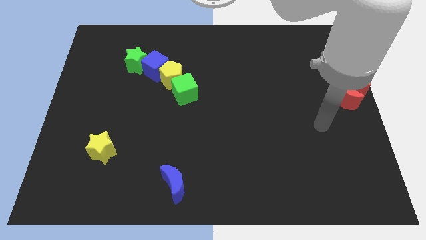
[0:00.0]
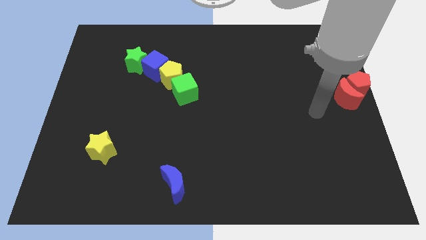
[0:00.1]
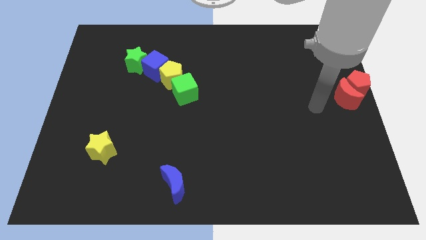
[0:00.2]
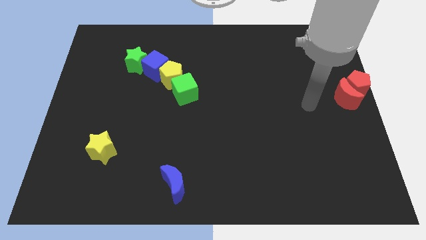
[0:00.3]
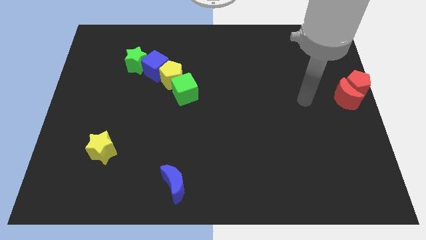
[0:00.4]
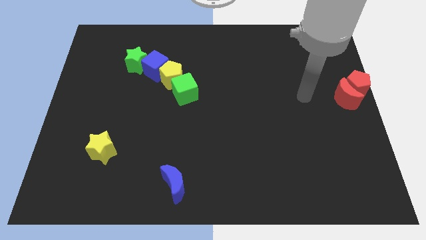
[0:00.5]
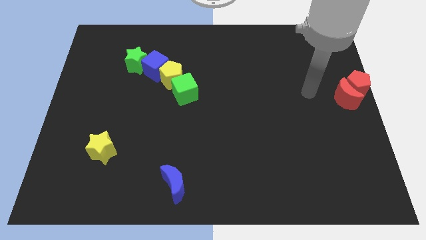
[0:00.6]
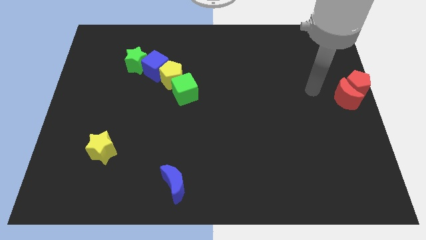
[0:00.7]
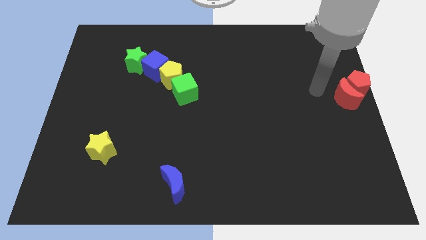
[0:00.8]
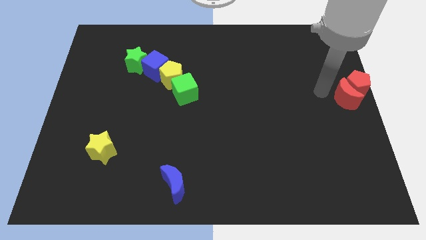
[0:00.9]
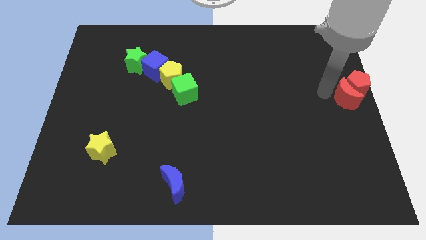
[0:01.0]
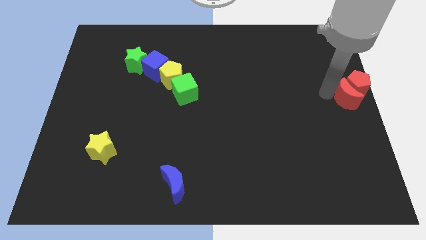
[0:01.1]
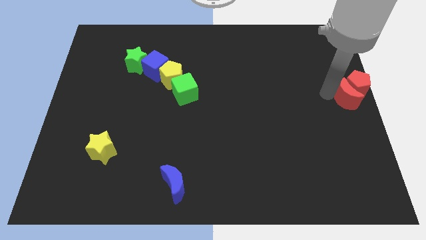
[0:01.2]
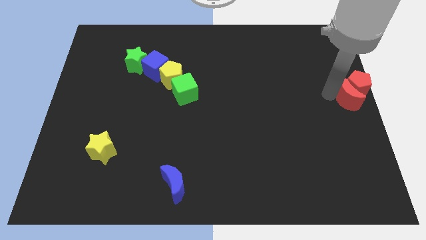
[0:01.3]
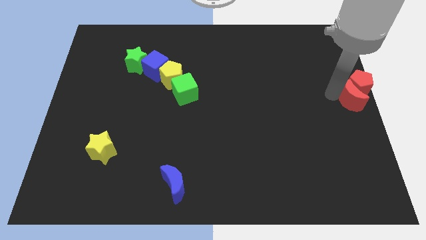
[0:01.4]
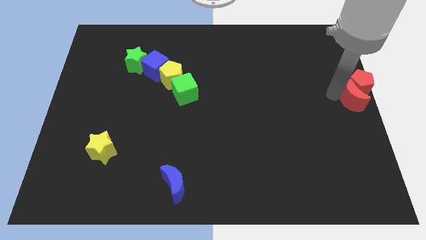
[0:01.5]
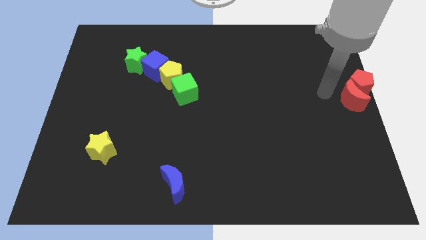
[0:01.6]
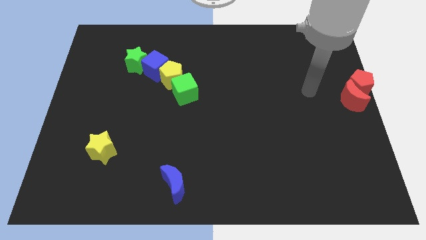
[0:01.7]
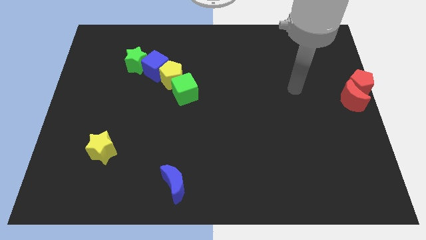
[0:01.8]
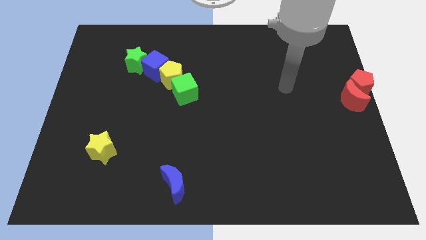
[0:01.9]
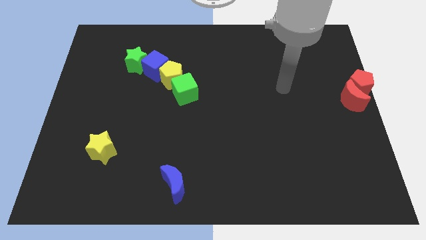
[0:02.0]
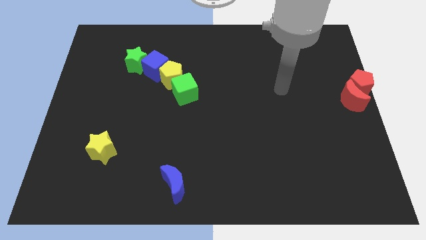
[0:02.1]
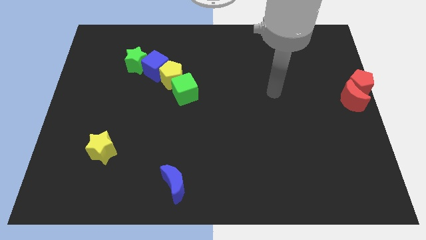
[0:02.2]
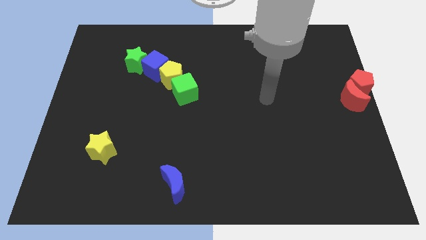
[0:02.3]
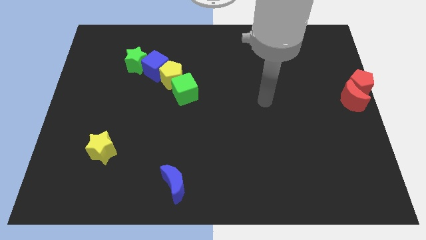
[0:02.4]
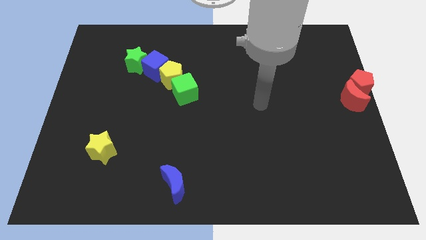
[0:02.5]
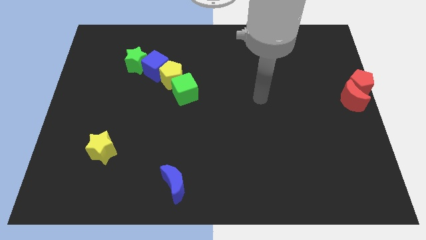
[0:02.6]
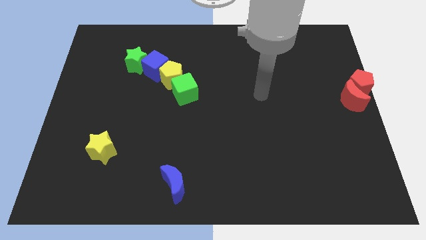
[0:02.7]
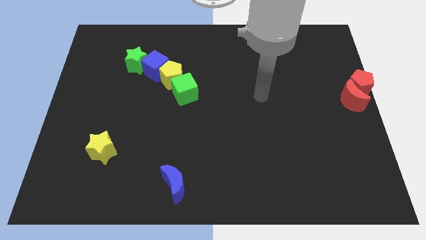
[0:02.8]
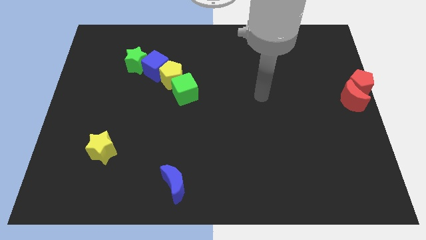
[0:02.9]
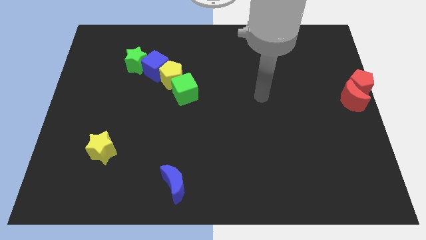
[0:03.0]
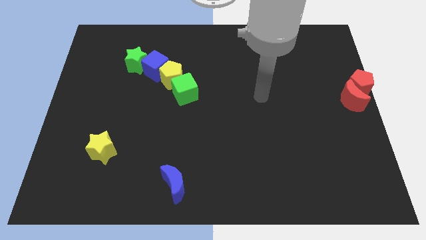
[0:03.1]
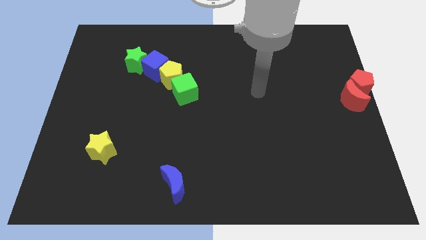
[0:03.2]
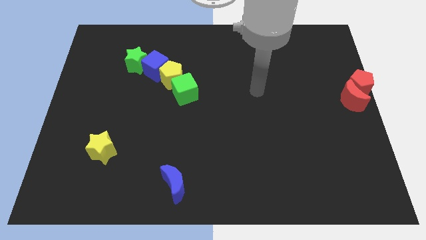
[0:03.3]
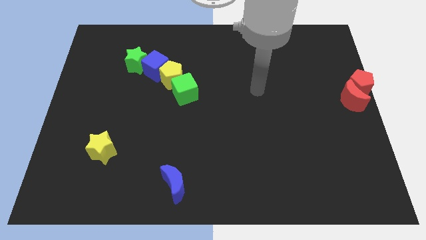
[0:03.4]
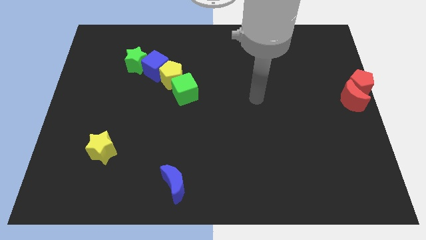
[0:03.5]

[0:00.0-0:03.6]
place both the red blocks at the center right side of the board

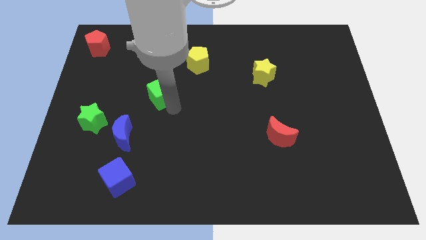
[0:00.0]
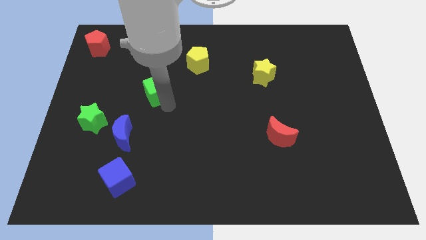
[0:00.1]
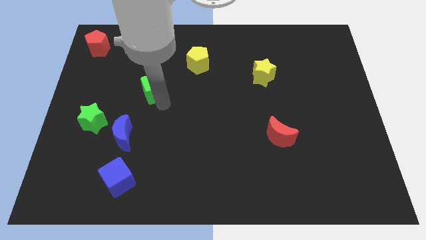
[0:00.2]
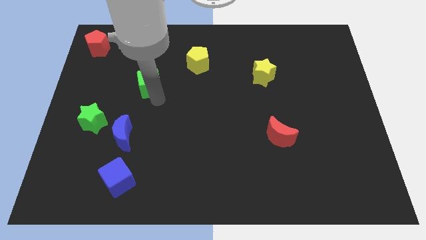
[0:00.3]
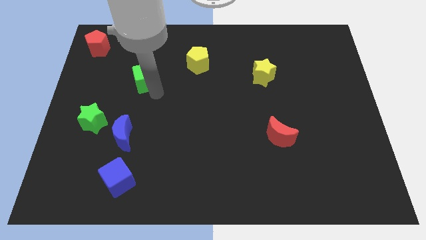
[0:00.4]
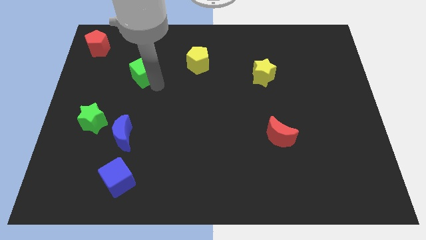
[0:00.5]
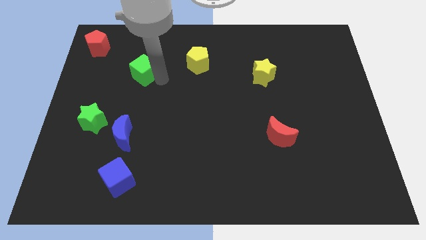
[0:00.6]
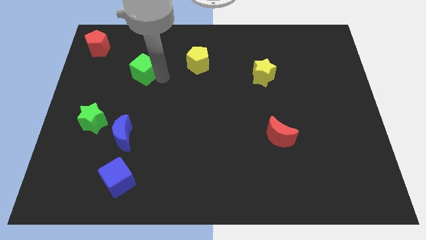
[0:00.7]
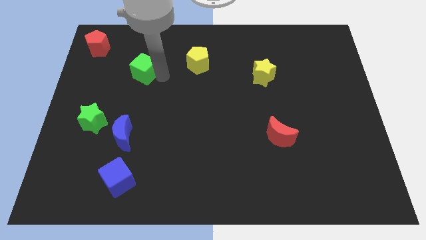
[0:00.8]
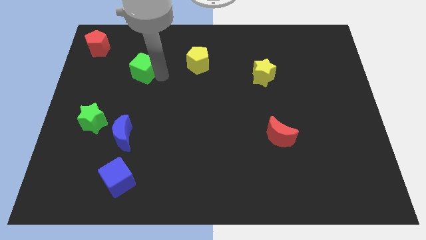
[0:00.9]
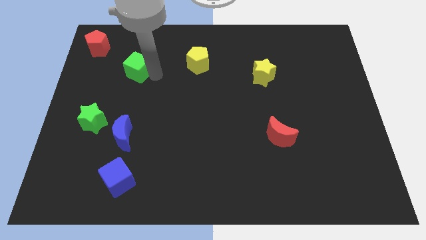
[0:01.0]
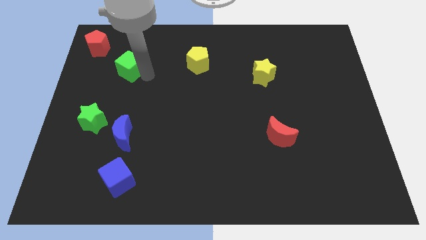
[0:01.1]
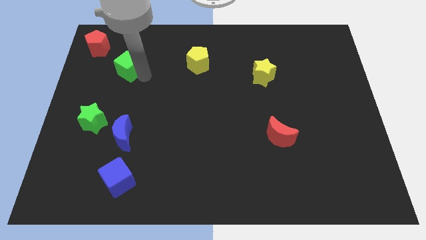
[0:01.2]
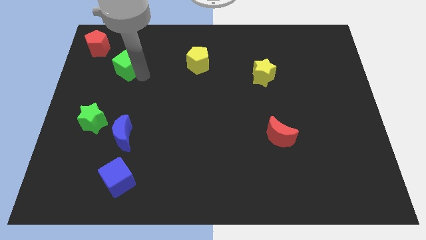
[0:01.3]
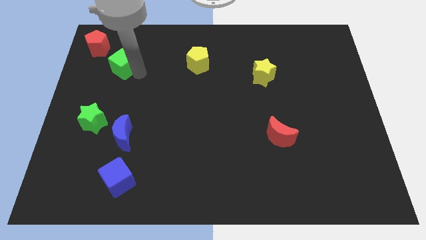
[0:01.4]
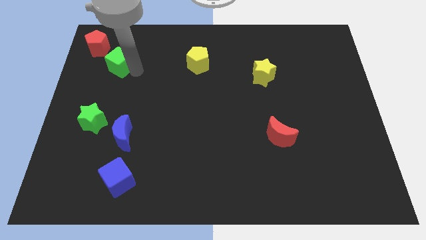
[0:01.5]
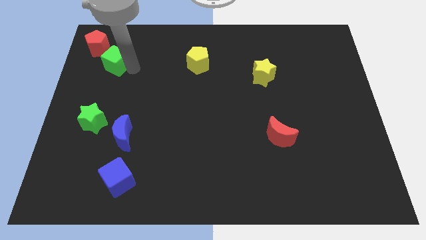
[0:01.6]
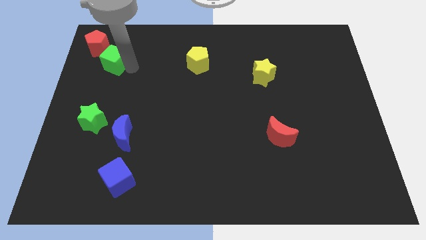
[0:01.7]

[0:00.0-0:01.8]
push the green cube towards the red pentagon

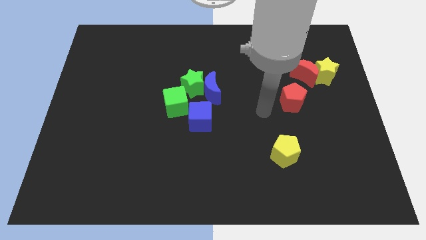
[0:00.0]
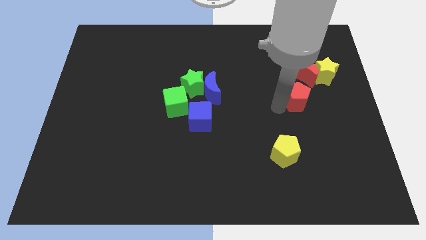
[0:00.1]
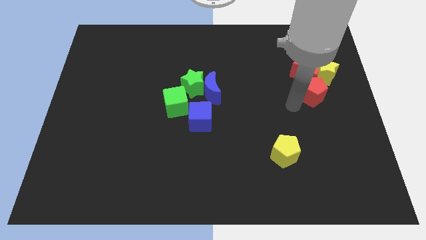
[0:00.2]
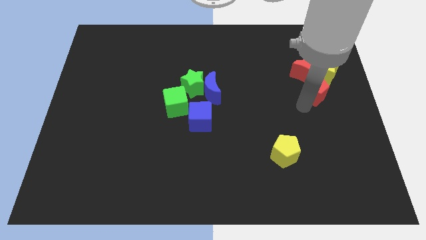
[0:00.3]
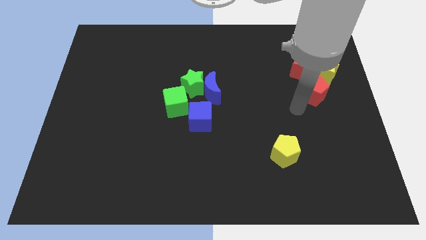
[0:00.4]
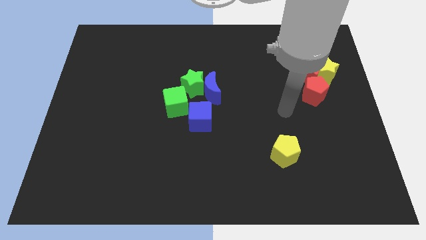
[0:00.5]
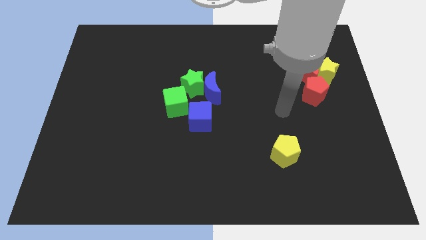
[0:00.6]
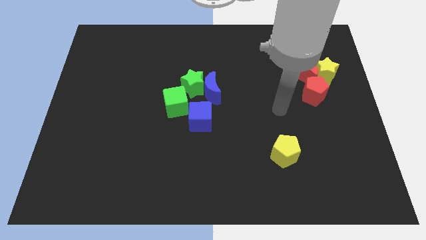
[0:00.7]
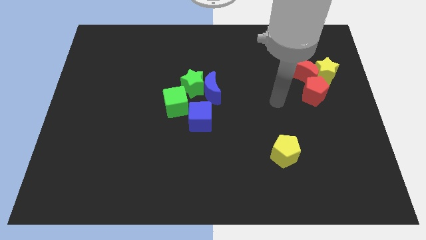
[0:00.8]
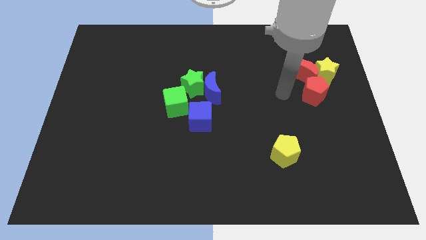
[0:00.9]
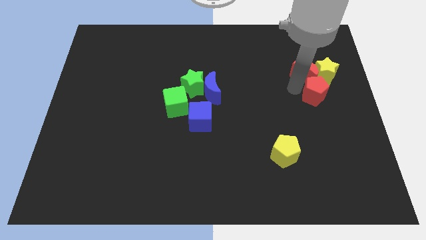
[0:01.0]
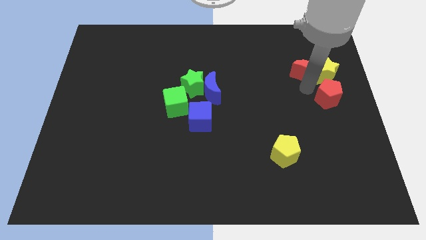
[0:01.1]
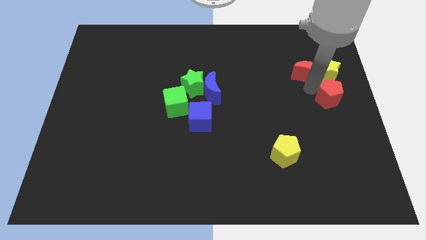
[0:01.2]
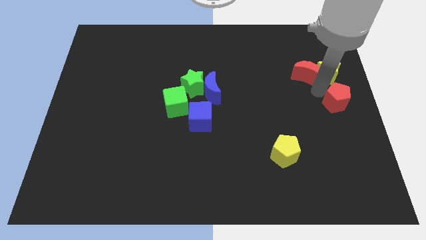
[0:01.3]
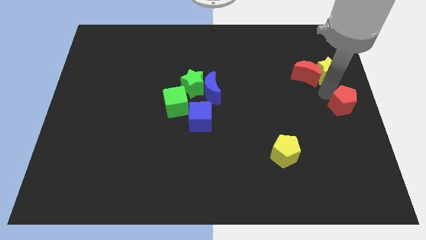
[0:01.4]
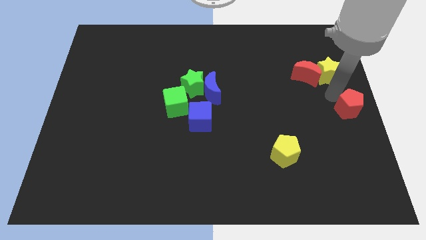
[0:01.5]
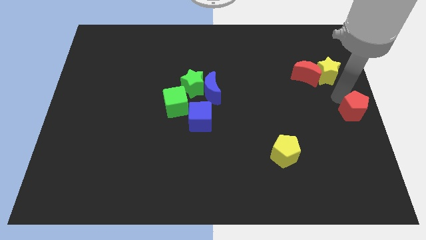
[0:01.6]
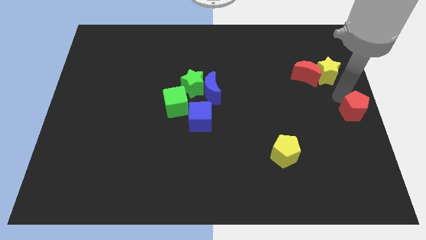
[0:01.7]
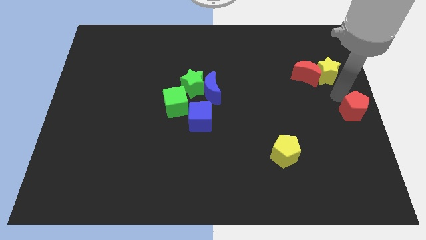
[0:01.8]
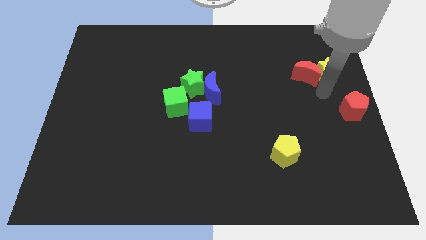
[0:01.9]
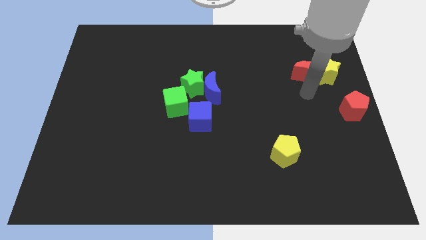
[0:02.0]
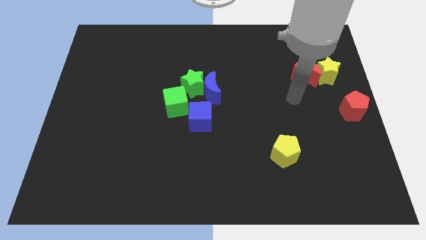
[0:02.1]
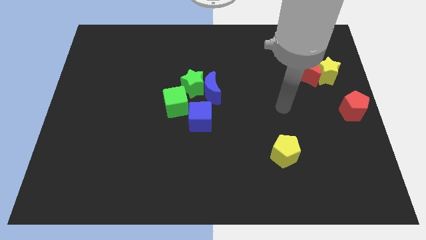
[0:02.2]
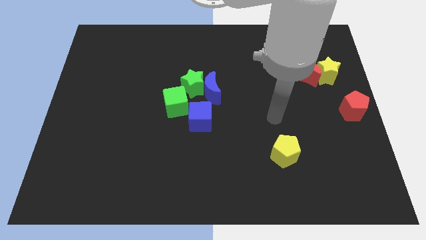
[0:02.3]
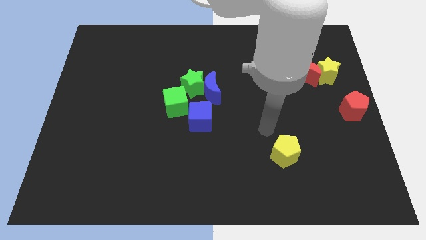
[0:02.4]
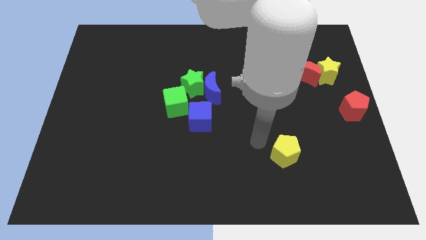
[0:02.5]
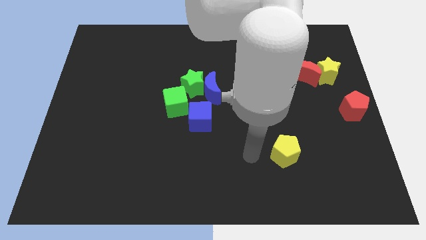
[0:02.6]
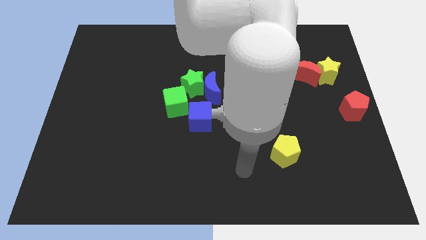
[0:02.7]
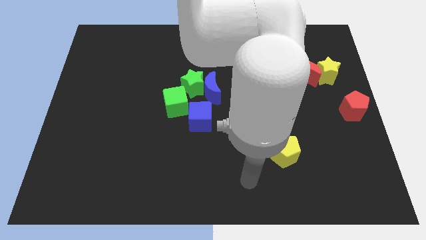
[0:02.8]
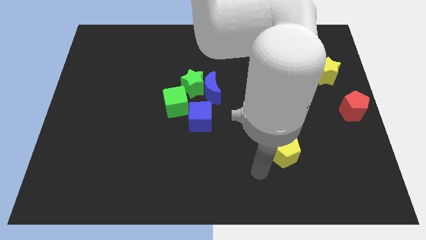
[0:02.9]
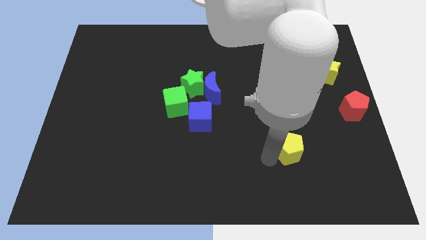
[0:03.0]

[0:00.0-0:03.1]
place the red pentagon at right center of the board

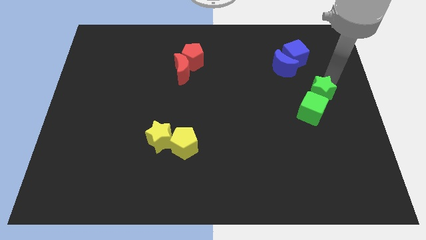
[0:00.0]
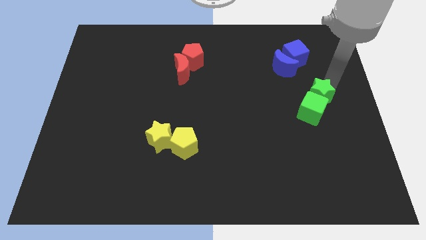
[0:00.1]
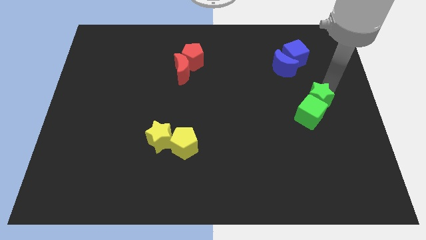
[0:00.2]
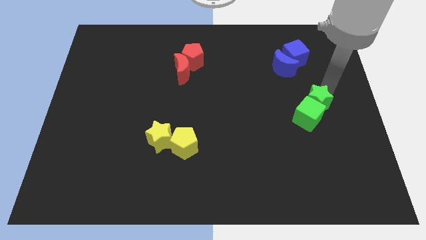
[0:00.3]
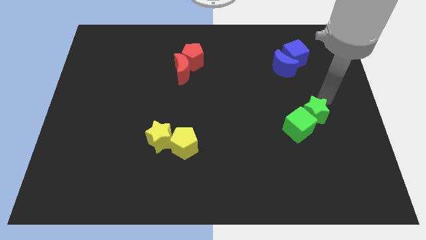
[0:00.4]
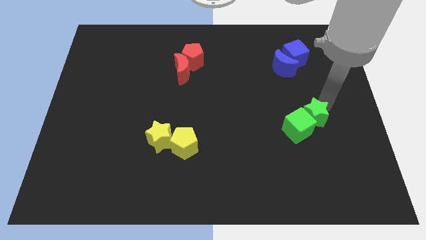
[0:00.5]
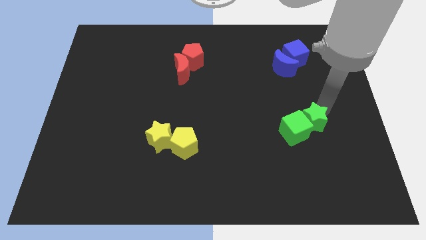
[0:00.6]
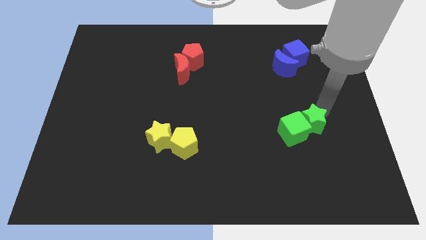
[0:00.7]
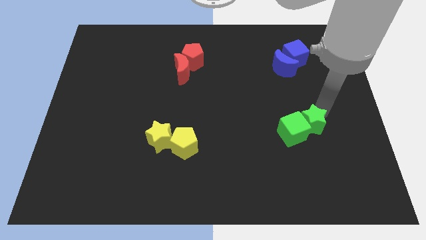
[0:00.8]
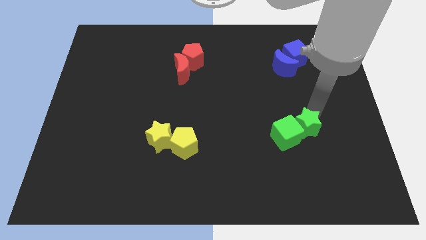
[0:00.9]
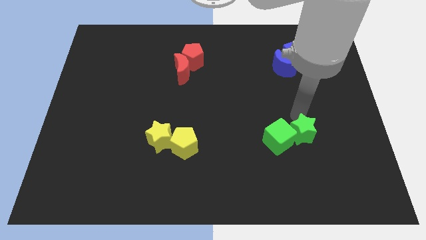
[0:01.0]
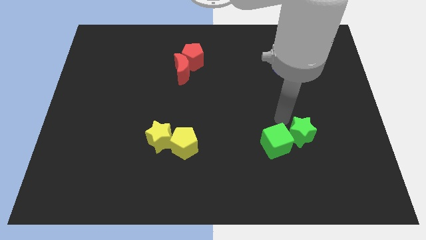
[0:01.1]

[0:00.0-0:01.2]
drag the green star slightly downwards
